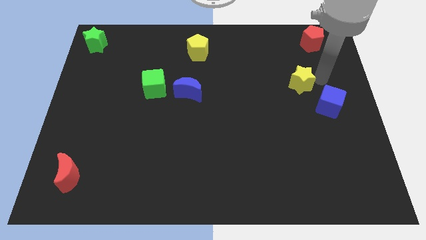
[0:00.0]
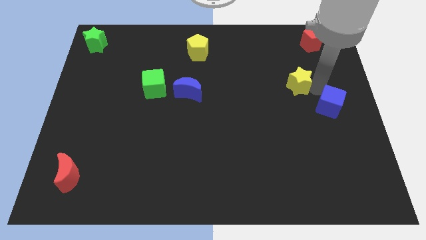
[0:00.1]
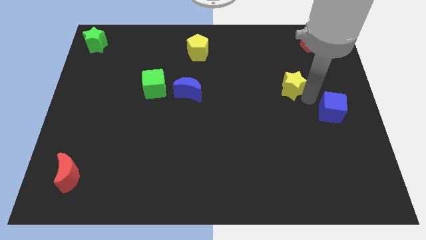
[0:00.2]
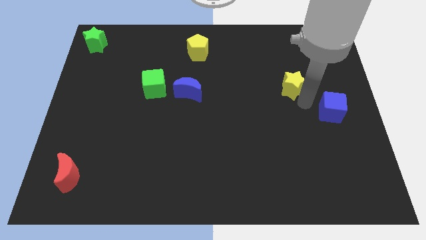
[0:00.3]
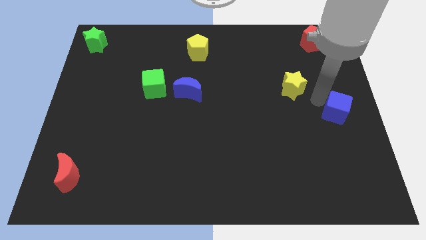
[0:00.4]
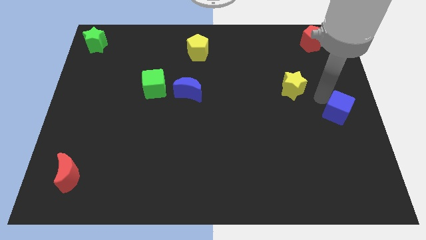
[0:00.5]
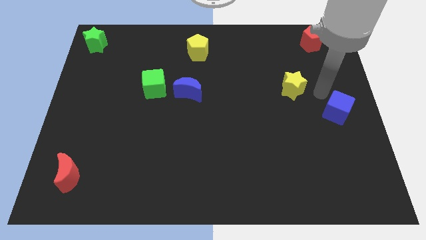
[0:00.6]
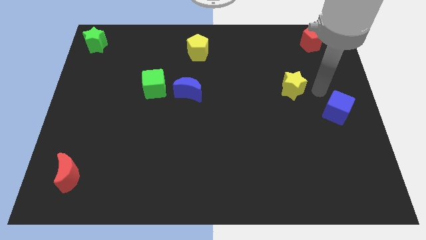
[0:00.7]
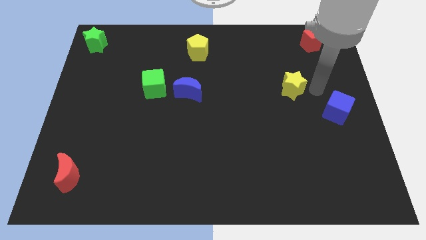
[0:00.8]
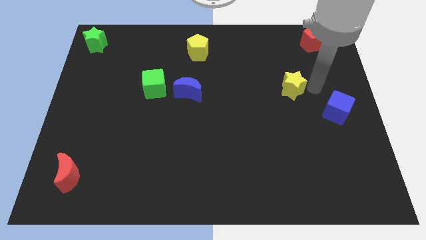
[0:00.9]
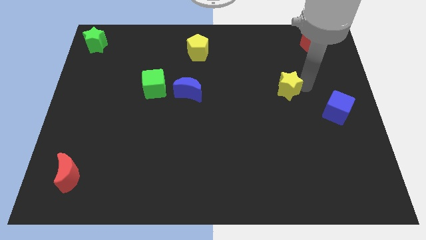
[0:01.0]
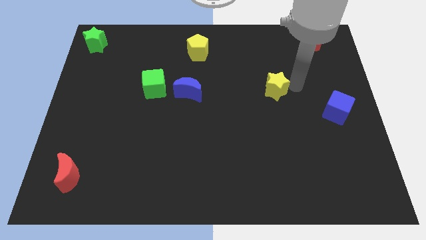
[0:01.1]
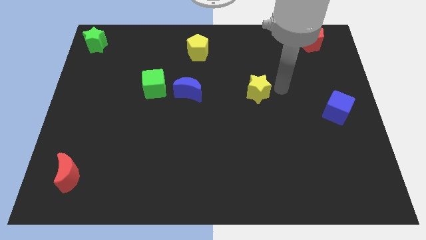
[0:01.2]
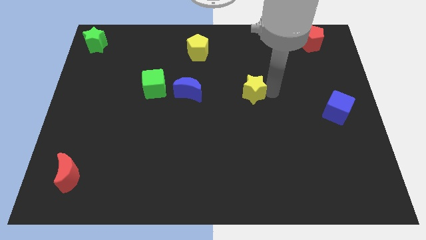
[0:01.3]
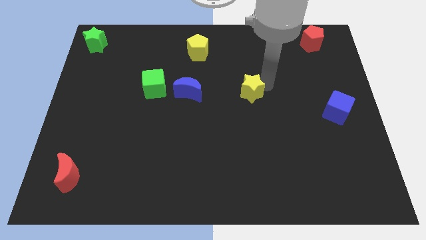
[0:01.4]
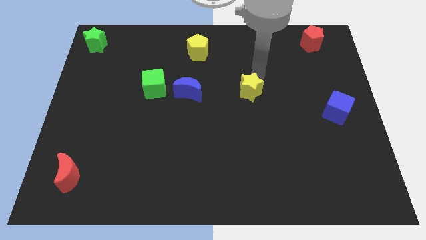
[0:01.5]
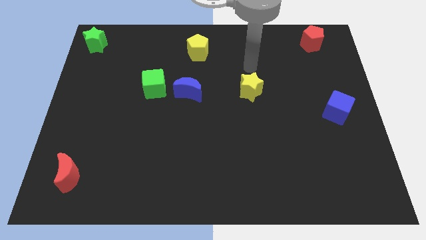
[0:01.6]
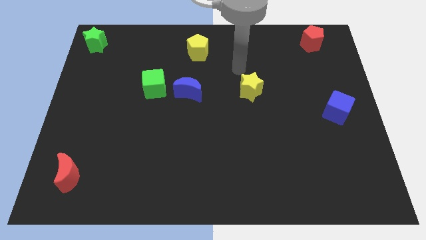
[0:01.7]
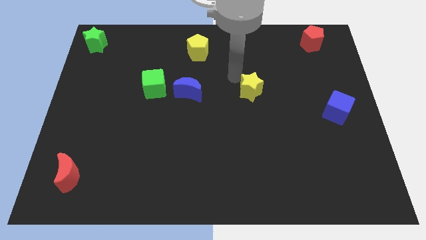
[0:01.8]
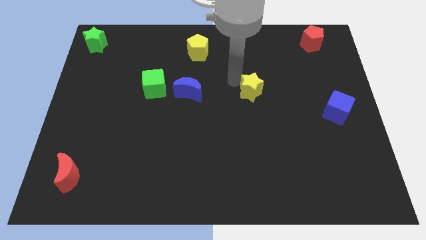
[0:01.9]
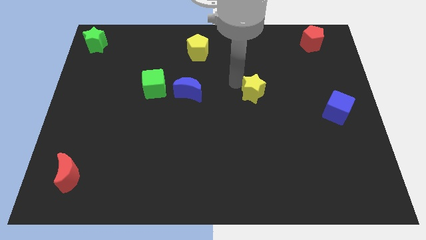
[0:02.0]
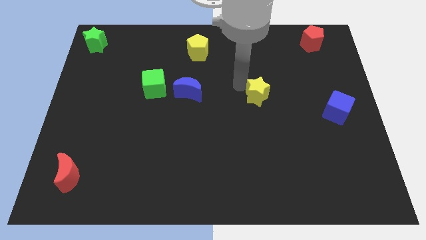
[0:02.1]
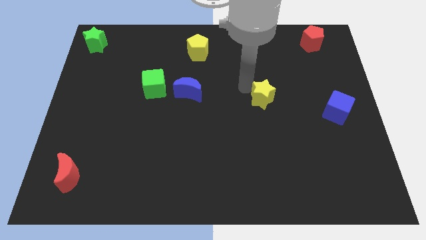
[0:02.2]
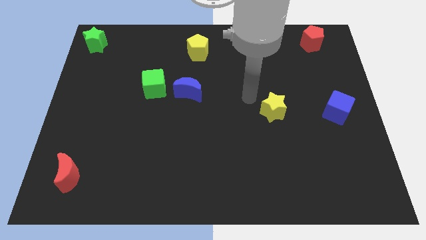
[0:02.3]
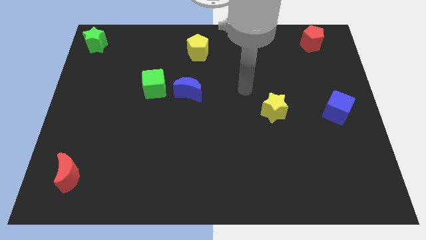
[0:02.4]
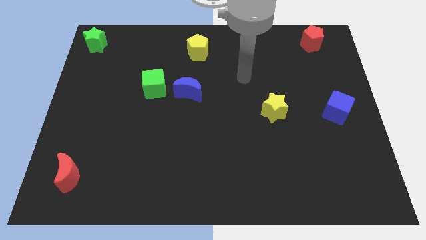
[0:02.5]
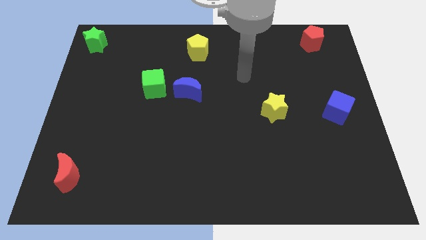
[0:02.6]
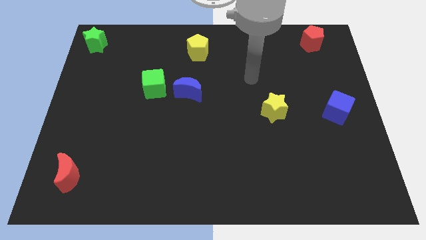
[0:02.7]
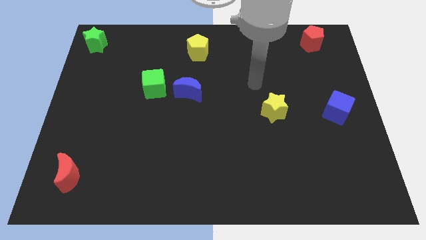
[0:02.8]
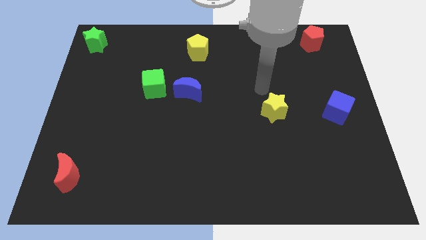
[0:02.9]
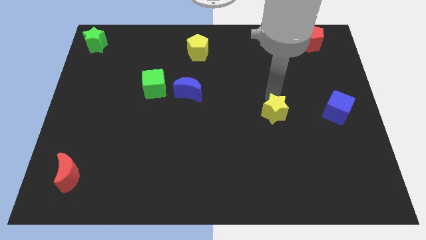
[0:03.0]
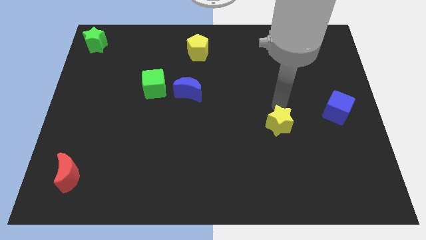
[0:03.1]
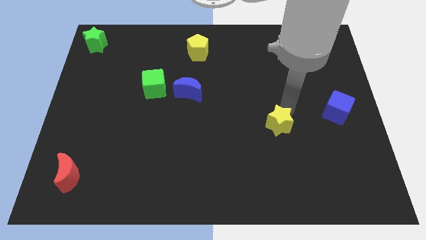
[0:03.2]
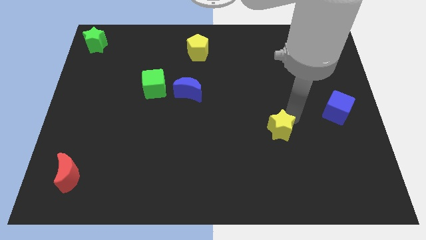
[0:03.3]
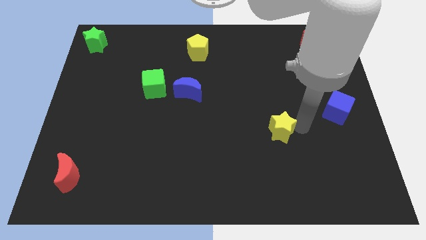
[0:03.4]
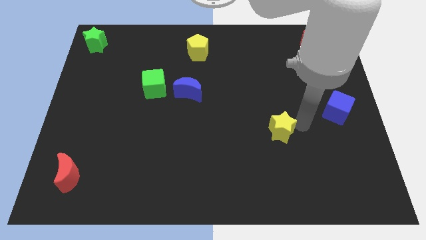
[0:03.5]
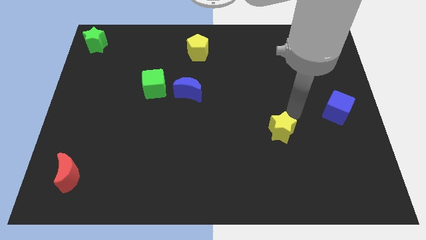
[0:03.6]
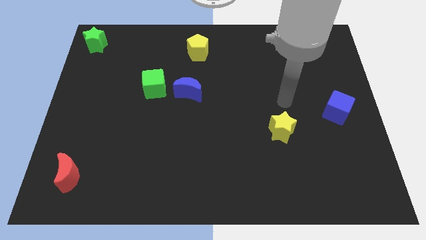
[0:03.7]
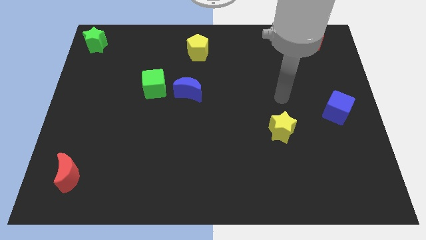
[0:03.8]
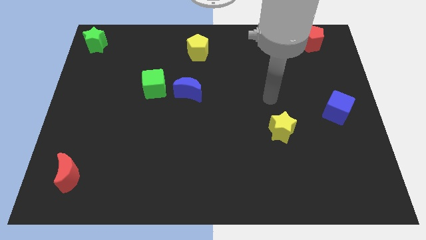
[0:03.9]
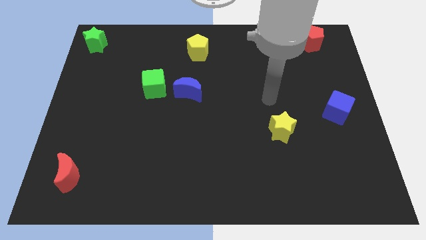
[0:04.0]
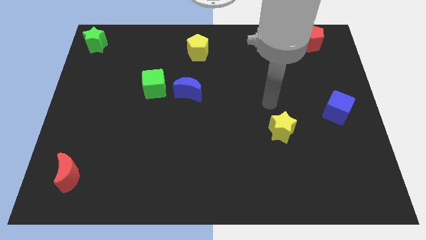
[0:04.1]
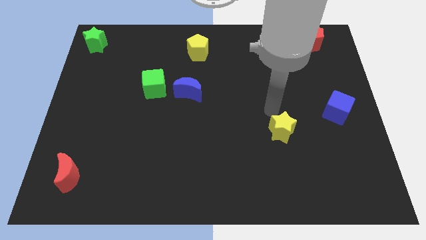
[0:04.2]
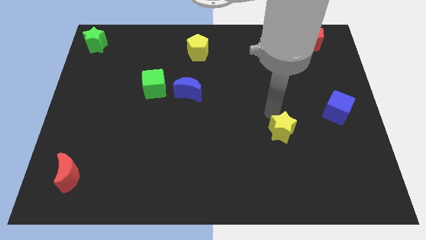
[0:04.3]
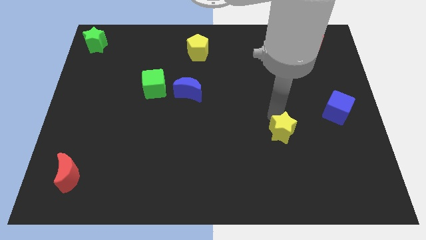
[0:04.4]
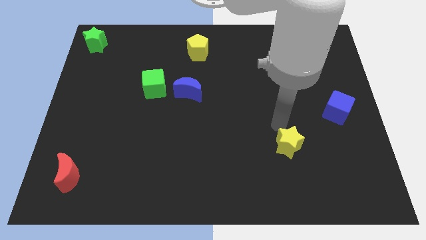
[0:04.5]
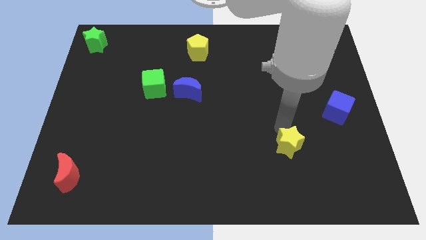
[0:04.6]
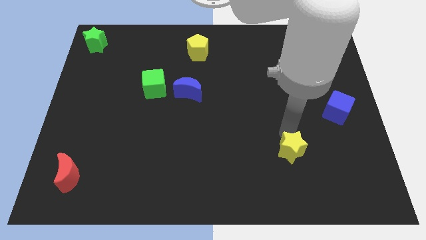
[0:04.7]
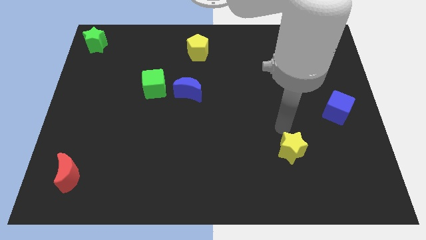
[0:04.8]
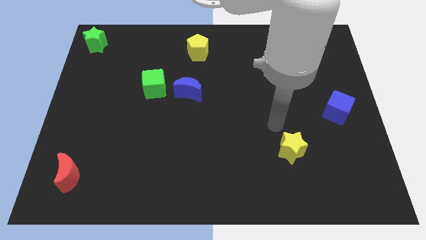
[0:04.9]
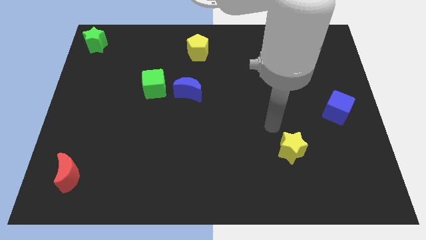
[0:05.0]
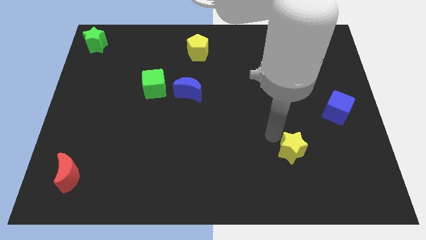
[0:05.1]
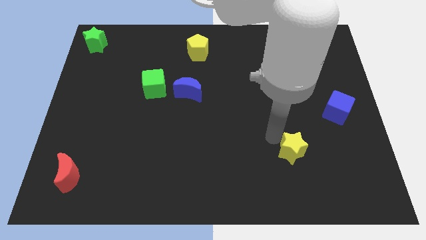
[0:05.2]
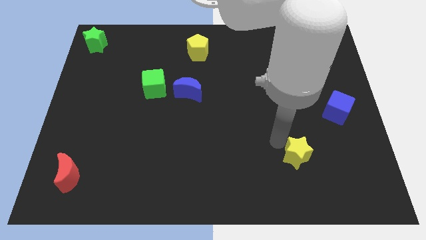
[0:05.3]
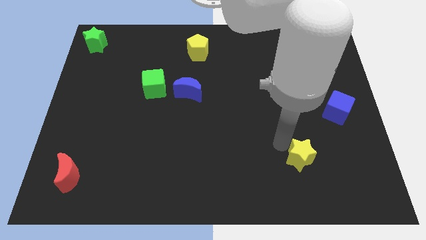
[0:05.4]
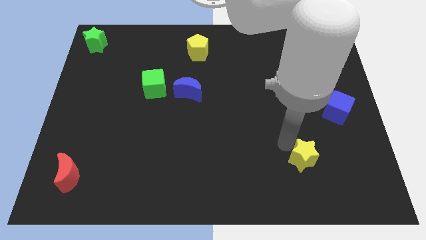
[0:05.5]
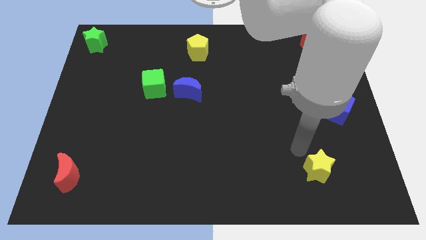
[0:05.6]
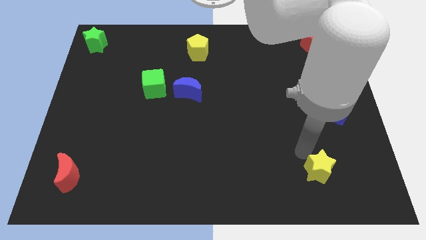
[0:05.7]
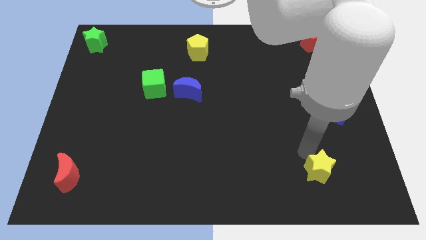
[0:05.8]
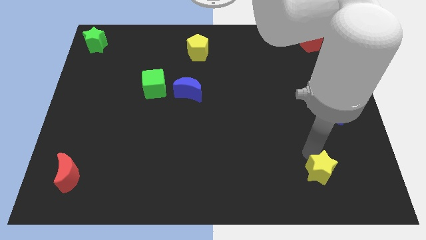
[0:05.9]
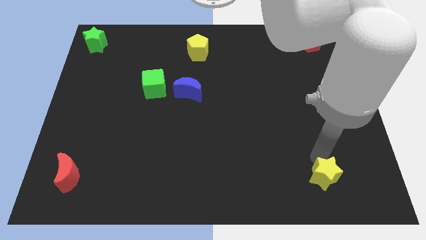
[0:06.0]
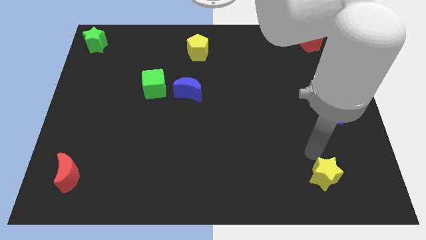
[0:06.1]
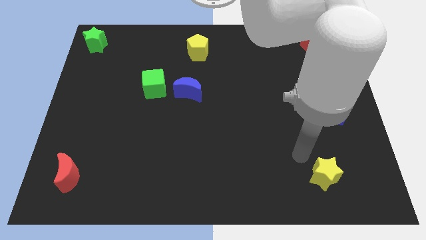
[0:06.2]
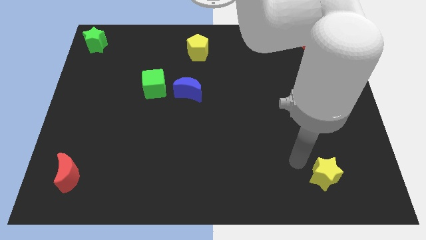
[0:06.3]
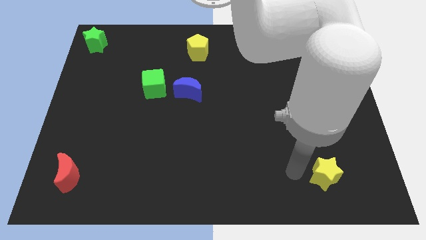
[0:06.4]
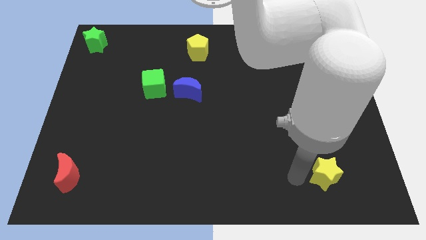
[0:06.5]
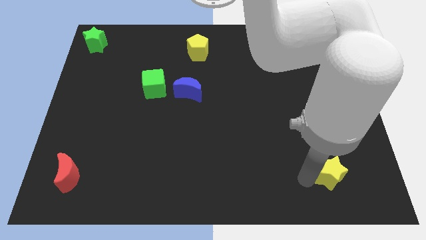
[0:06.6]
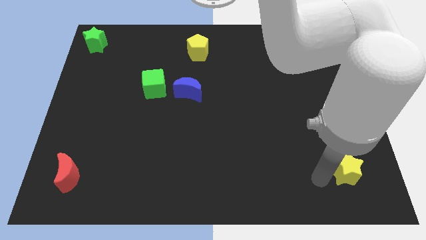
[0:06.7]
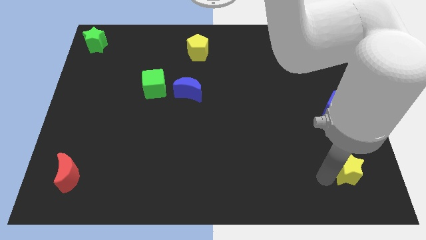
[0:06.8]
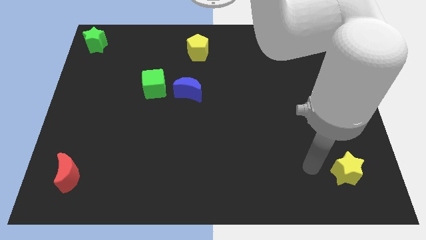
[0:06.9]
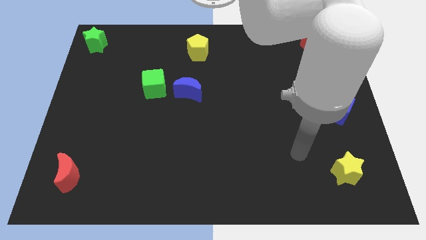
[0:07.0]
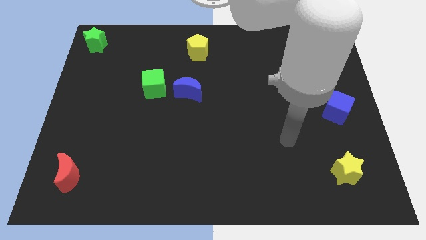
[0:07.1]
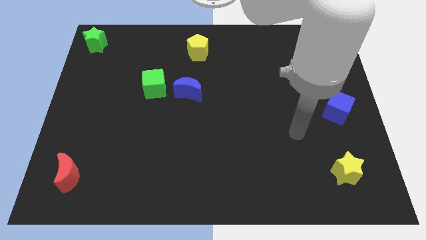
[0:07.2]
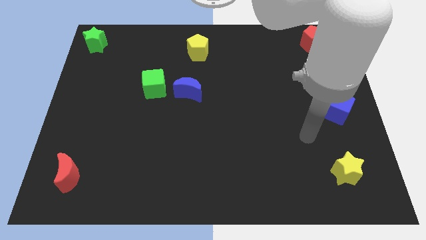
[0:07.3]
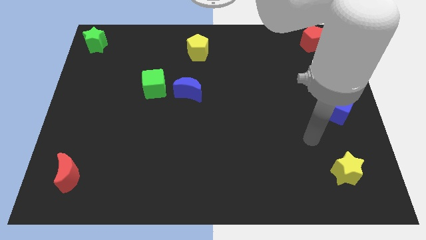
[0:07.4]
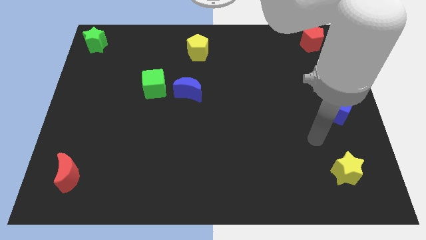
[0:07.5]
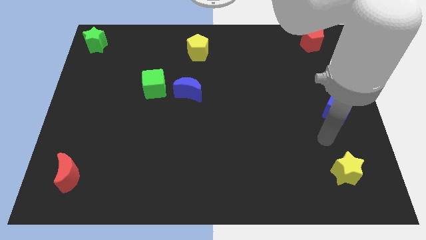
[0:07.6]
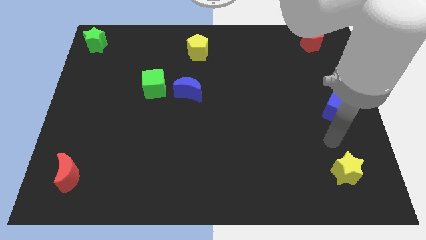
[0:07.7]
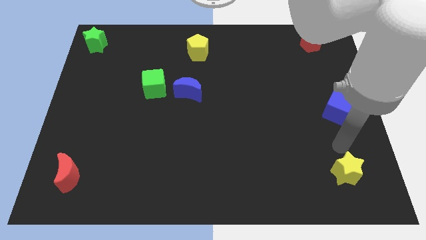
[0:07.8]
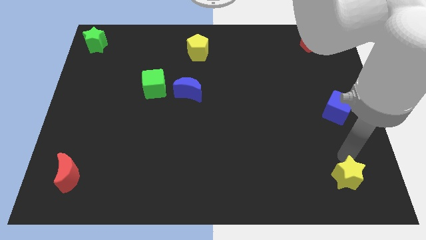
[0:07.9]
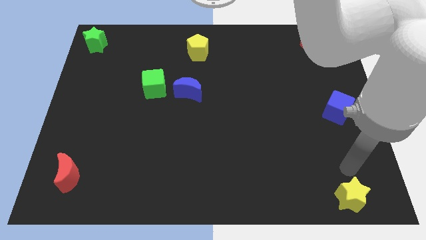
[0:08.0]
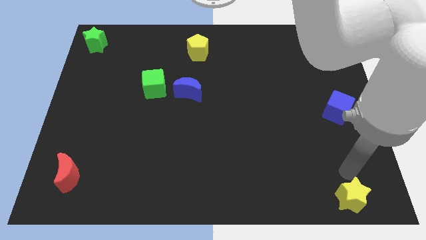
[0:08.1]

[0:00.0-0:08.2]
move the yellow star towards the right bottom of the board

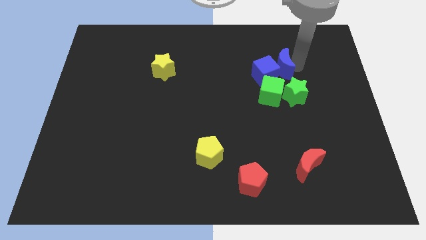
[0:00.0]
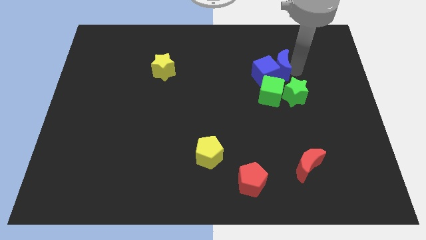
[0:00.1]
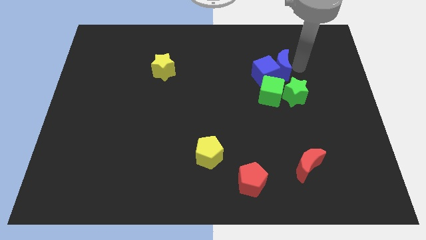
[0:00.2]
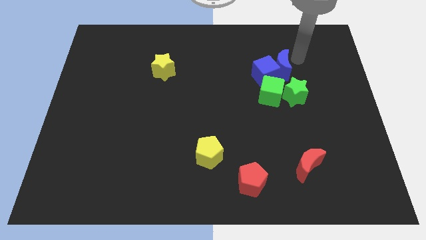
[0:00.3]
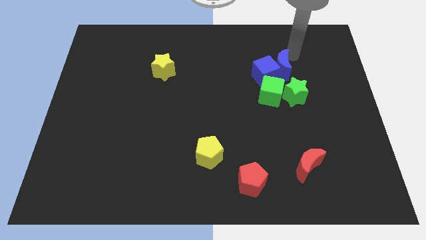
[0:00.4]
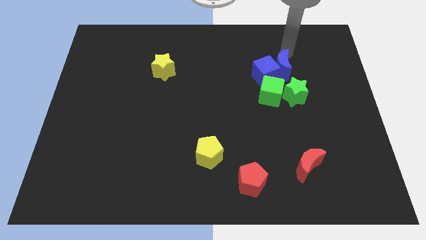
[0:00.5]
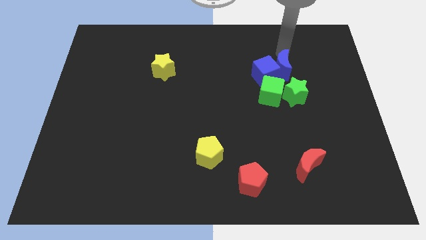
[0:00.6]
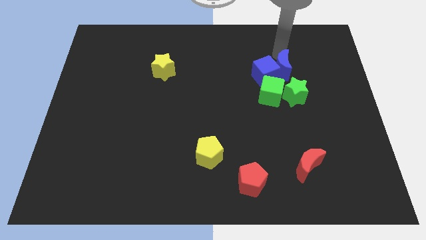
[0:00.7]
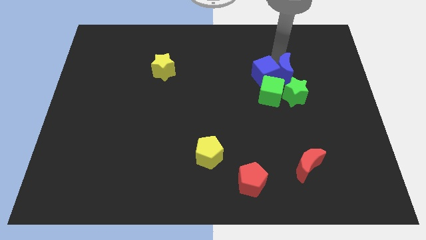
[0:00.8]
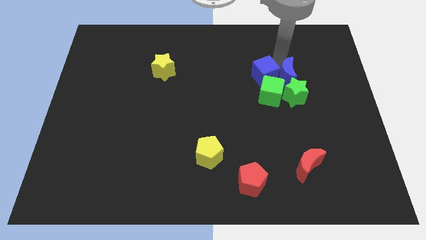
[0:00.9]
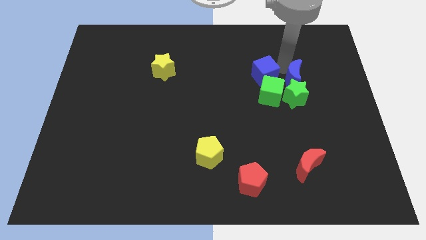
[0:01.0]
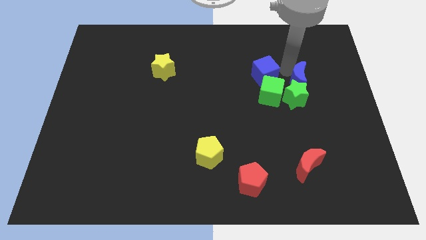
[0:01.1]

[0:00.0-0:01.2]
push blue crescent slightly towards down
